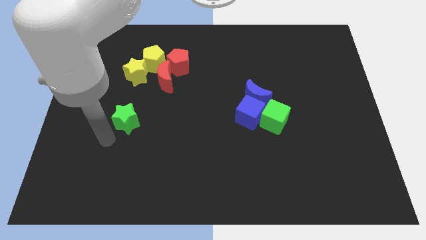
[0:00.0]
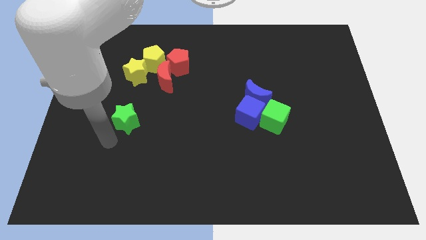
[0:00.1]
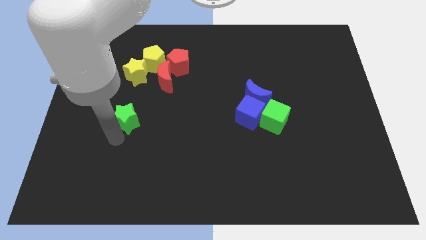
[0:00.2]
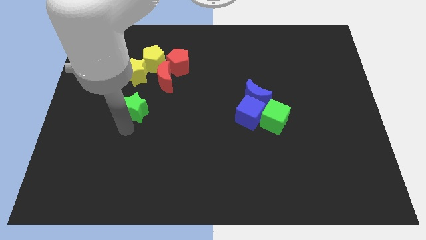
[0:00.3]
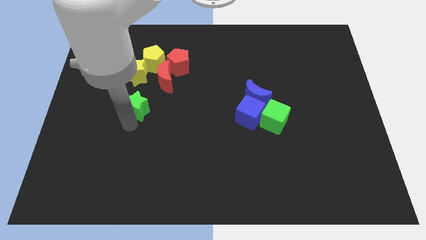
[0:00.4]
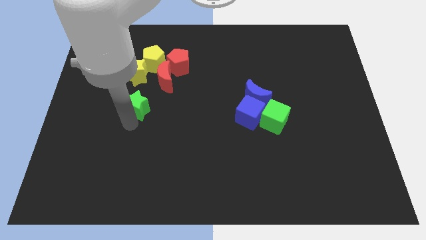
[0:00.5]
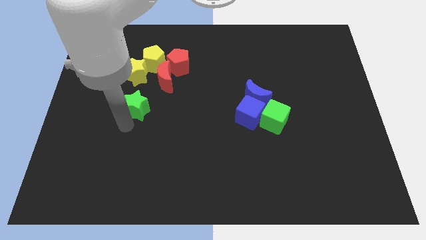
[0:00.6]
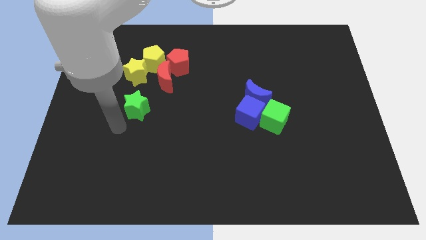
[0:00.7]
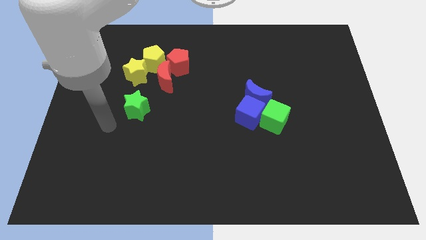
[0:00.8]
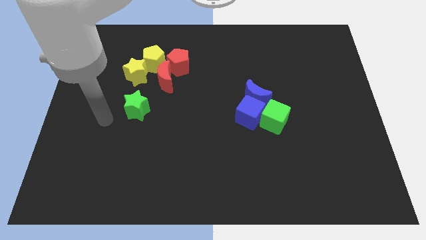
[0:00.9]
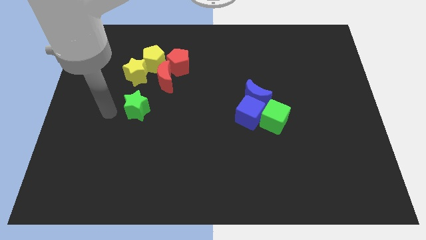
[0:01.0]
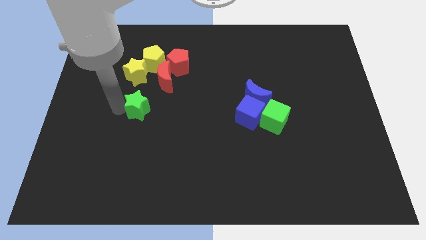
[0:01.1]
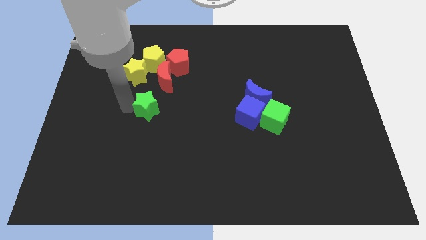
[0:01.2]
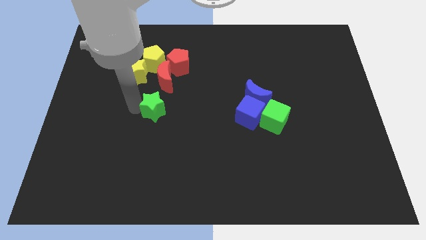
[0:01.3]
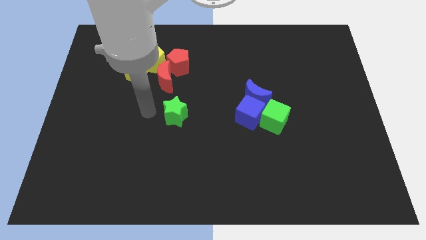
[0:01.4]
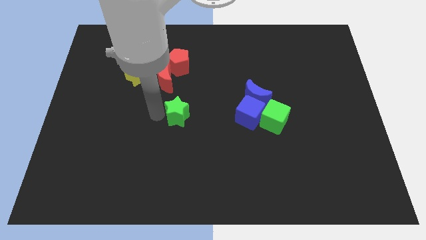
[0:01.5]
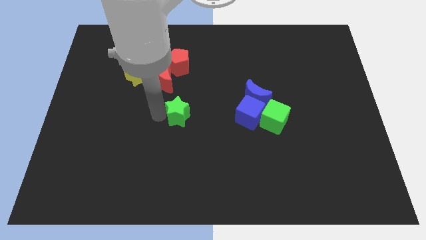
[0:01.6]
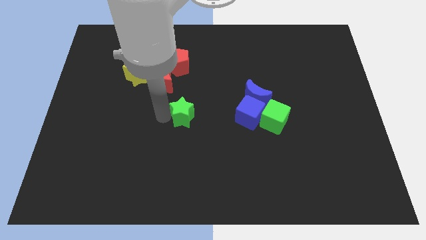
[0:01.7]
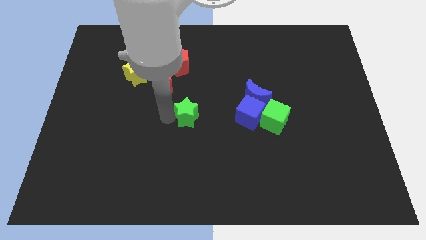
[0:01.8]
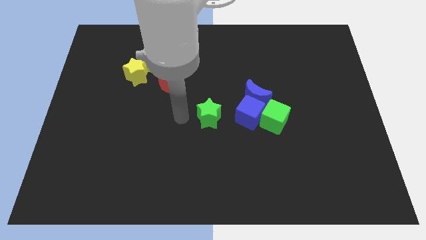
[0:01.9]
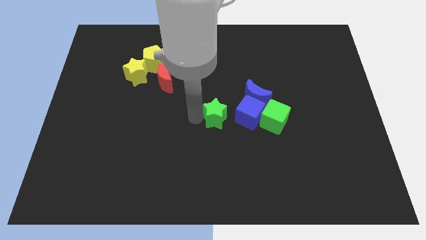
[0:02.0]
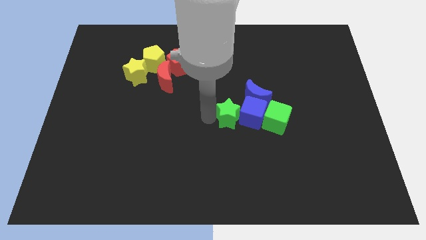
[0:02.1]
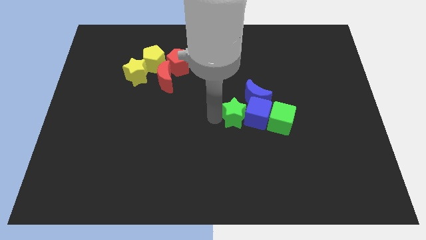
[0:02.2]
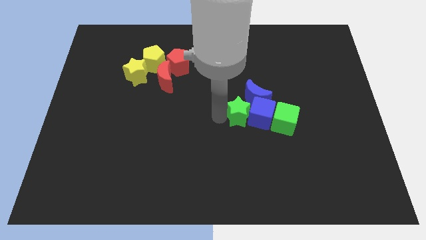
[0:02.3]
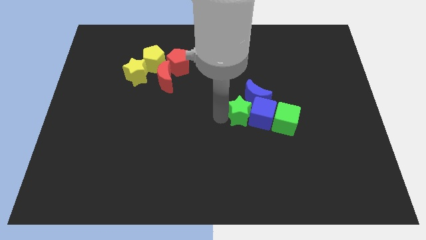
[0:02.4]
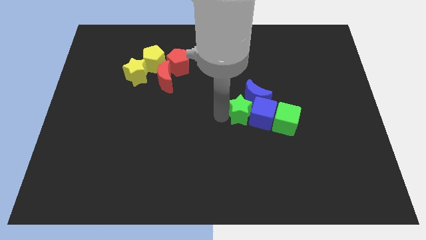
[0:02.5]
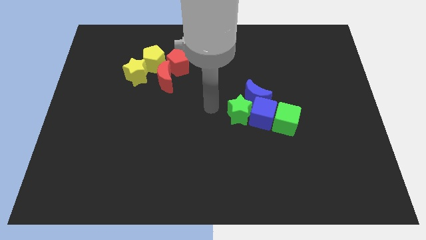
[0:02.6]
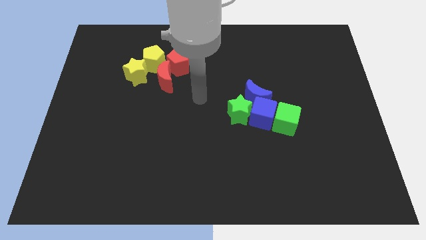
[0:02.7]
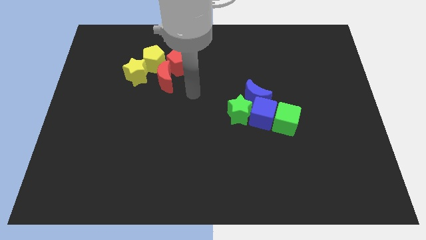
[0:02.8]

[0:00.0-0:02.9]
place green star left of blue block

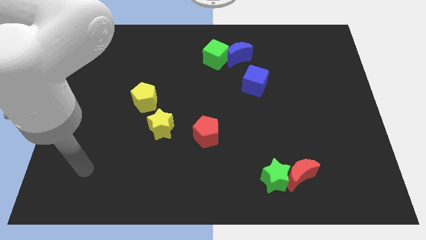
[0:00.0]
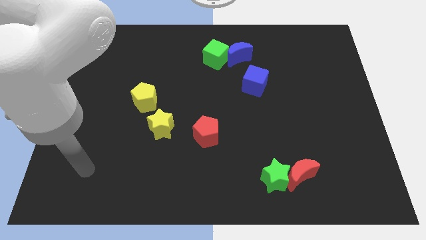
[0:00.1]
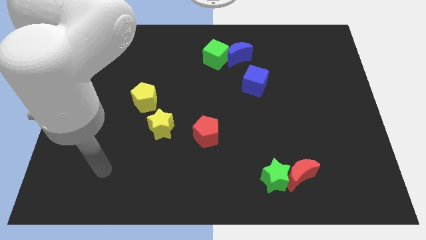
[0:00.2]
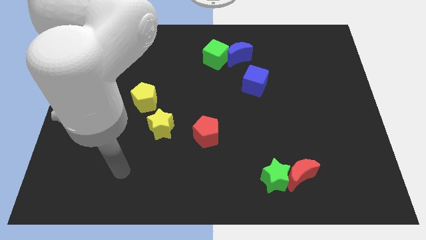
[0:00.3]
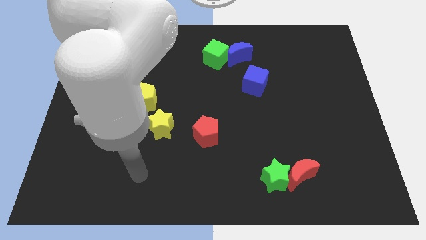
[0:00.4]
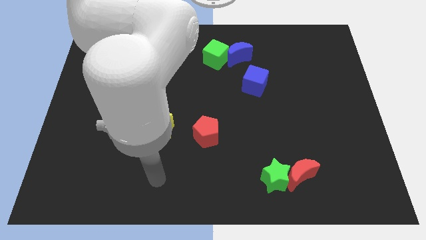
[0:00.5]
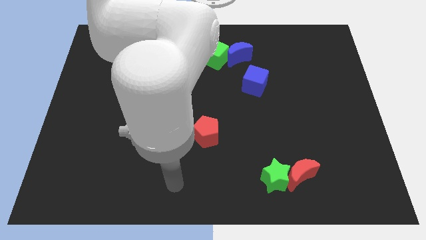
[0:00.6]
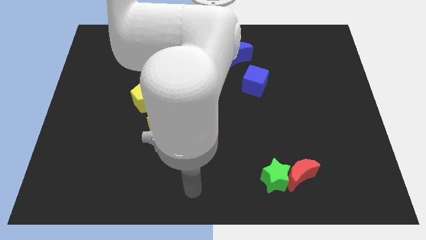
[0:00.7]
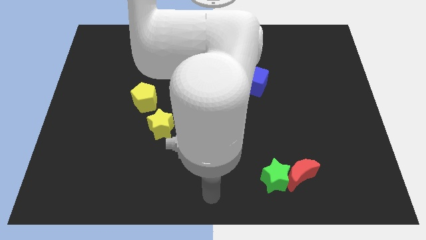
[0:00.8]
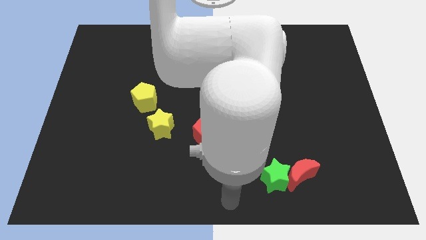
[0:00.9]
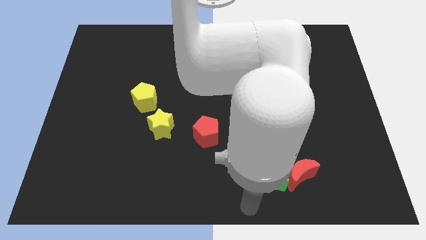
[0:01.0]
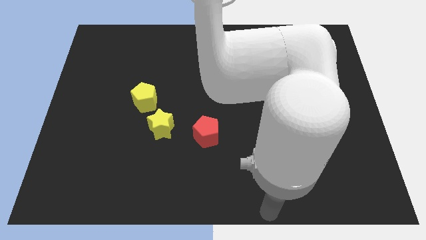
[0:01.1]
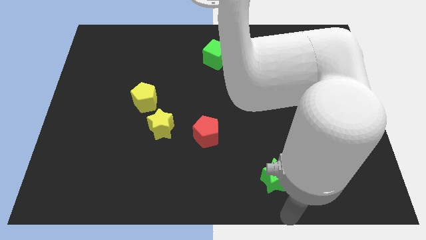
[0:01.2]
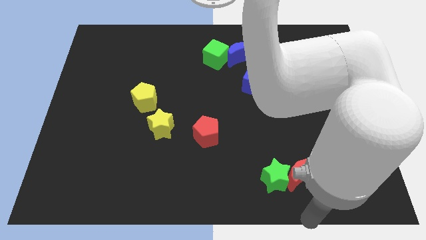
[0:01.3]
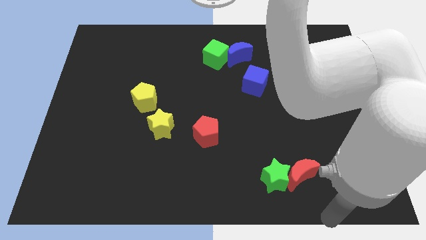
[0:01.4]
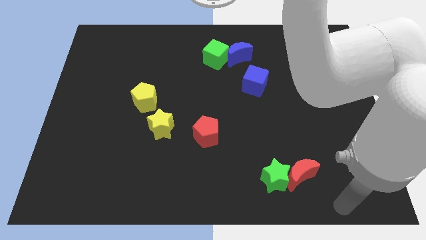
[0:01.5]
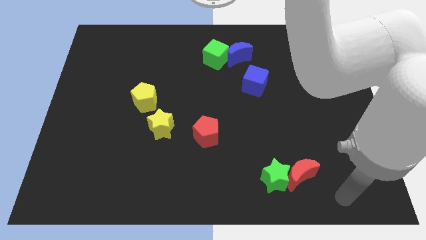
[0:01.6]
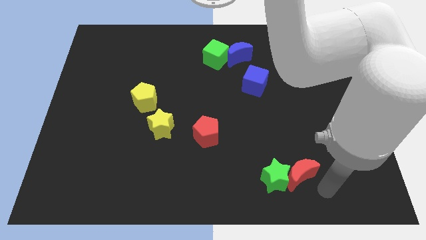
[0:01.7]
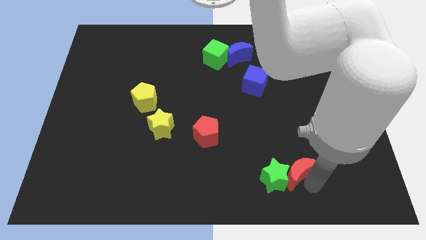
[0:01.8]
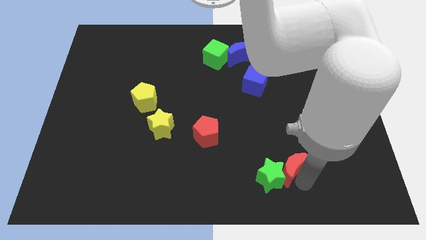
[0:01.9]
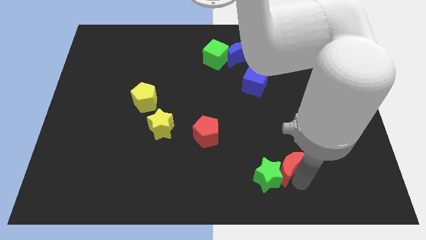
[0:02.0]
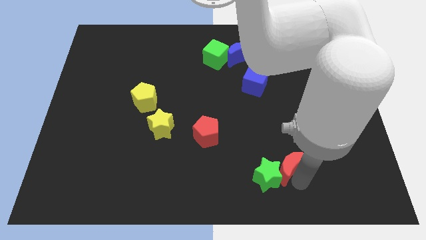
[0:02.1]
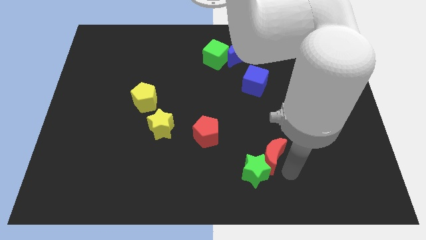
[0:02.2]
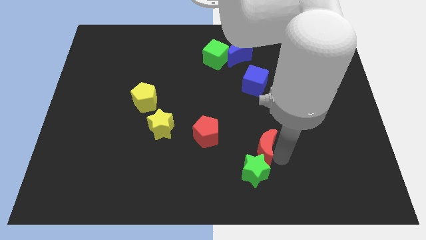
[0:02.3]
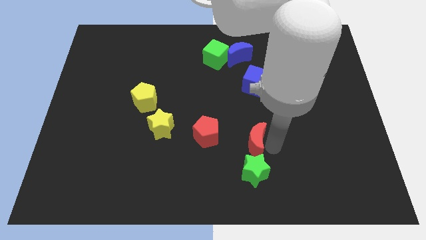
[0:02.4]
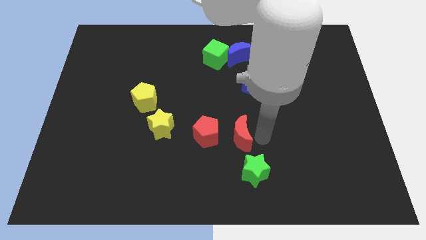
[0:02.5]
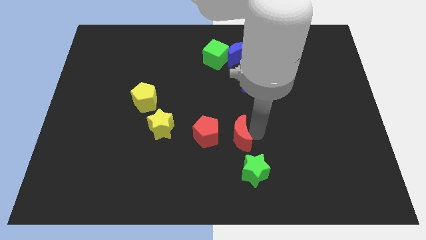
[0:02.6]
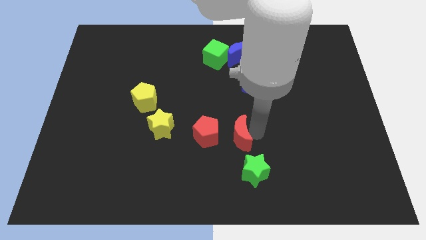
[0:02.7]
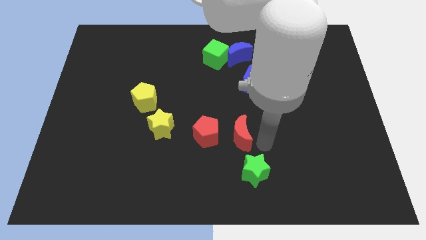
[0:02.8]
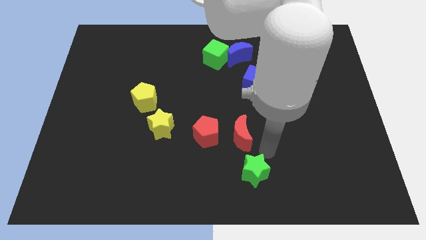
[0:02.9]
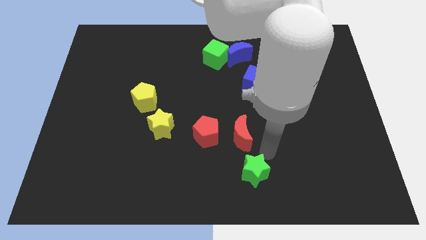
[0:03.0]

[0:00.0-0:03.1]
push the red moon to the right side of the red pentagon

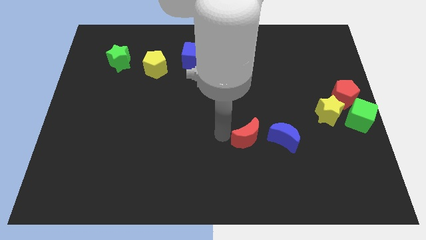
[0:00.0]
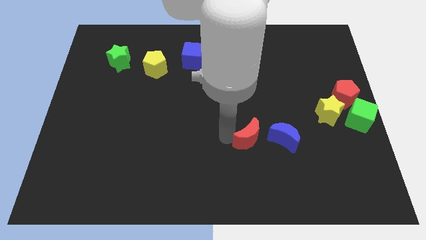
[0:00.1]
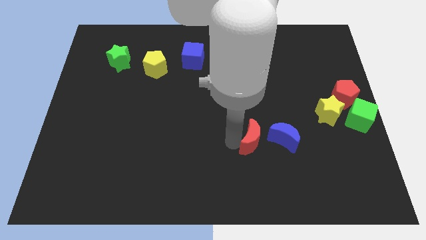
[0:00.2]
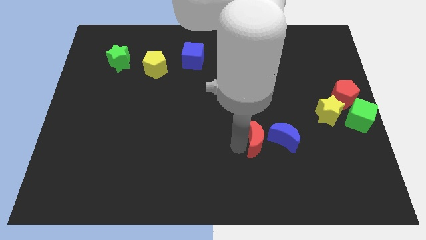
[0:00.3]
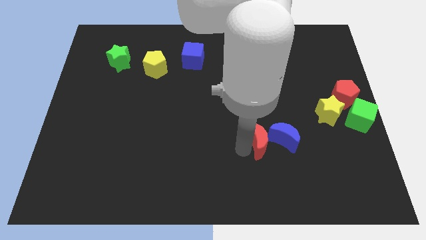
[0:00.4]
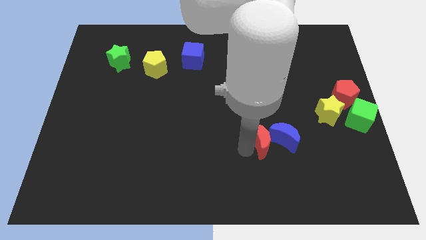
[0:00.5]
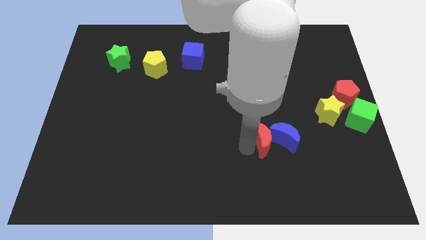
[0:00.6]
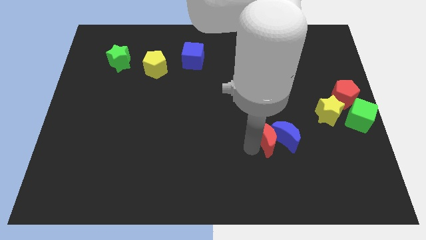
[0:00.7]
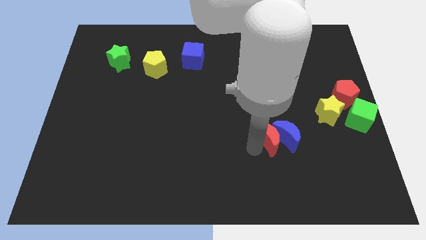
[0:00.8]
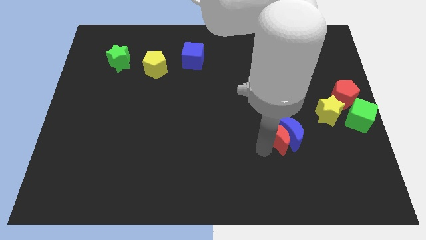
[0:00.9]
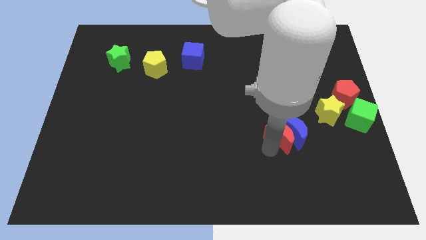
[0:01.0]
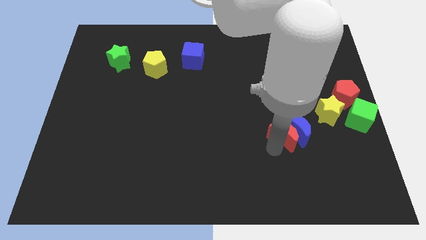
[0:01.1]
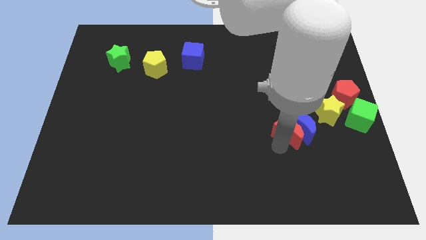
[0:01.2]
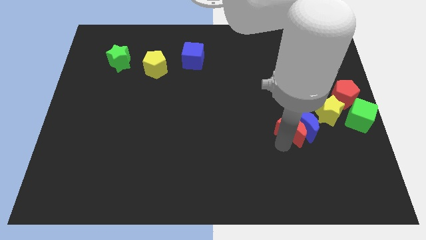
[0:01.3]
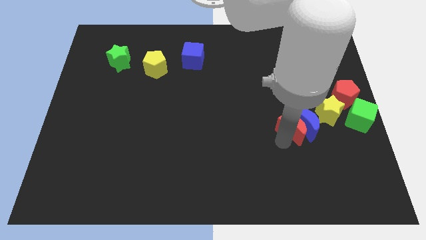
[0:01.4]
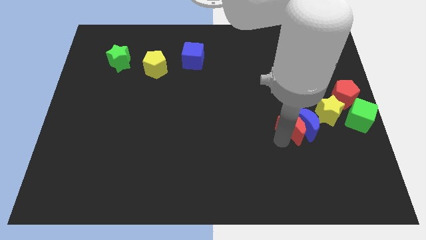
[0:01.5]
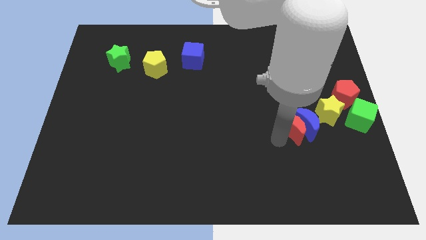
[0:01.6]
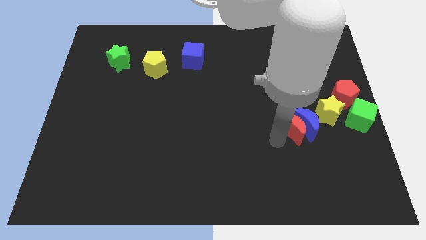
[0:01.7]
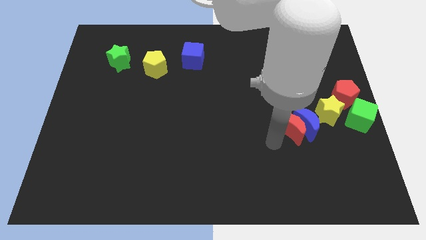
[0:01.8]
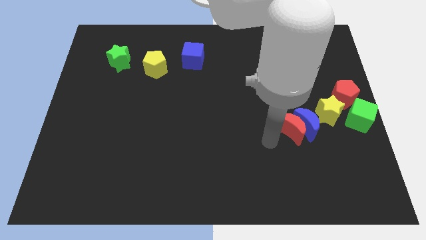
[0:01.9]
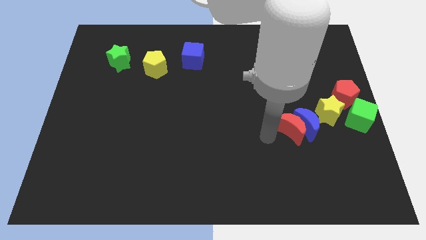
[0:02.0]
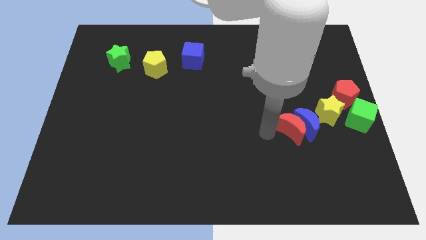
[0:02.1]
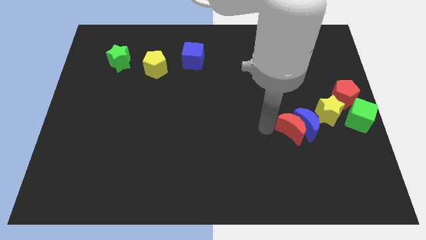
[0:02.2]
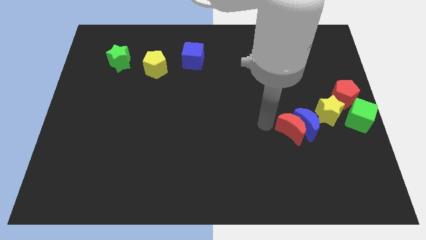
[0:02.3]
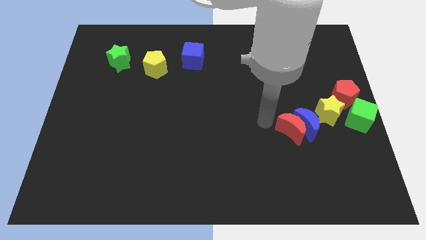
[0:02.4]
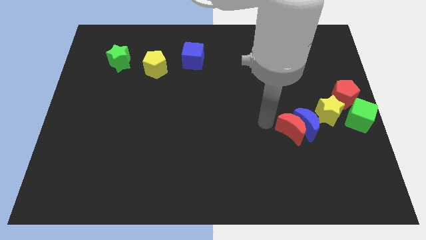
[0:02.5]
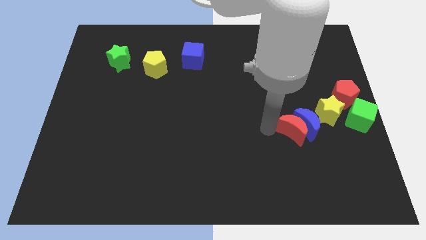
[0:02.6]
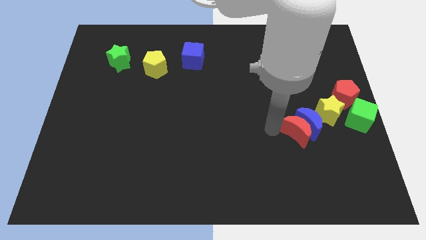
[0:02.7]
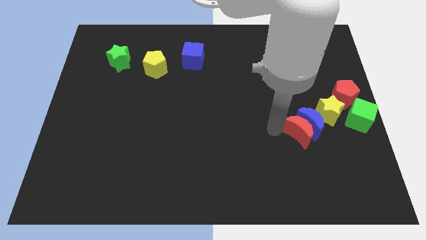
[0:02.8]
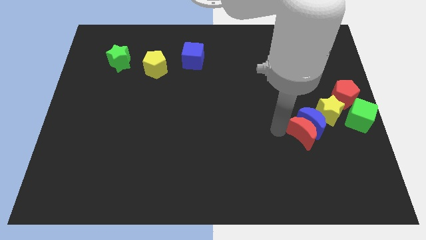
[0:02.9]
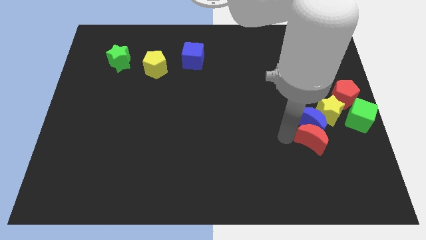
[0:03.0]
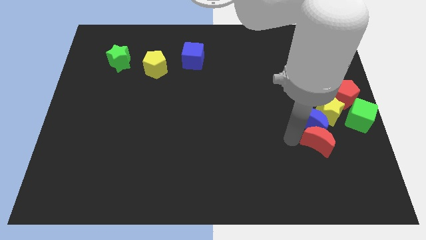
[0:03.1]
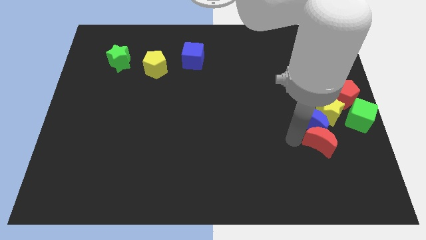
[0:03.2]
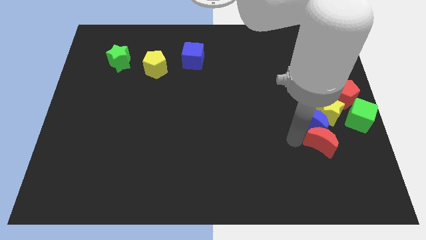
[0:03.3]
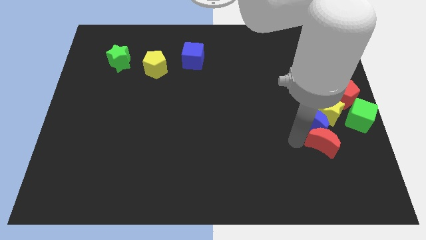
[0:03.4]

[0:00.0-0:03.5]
push the red moon slightly to the right side of the board
